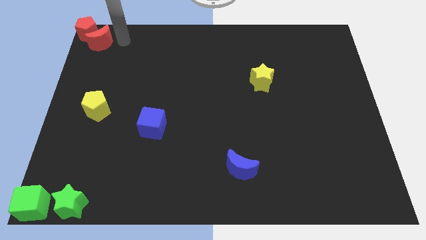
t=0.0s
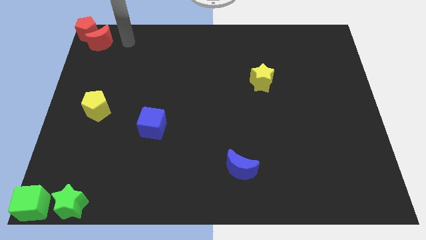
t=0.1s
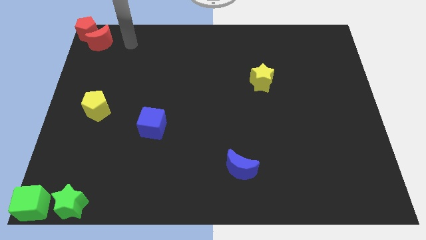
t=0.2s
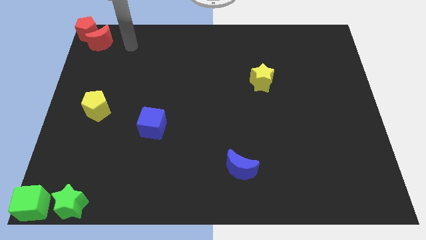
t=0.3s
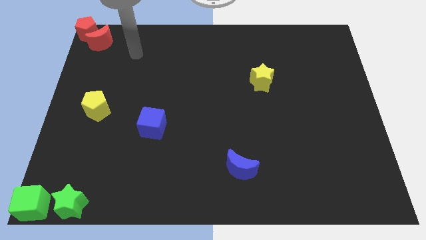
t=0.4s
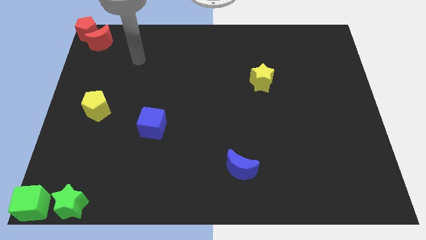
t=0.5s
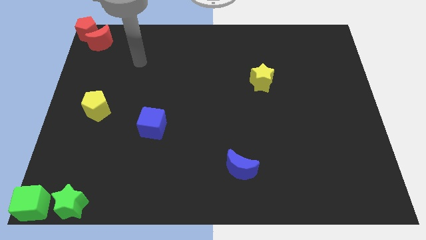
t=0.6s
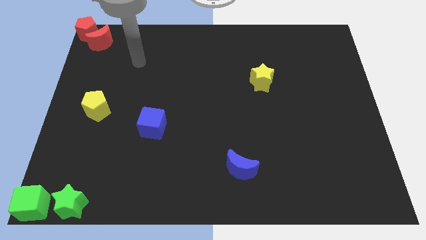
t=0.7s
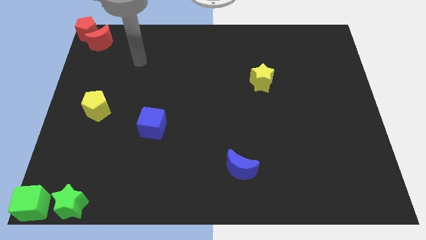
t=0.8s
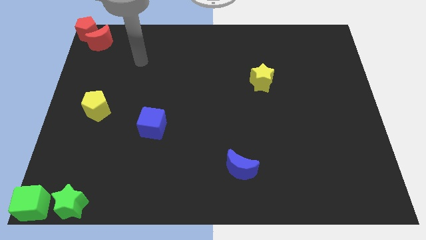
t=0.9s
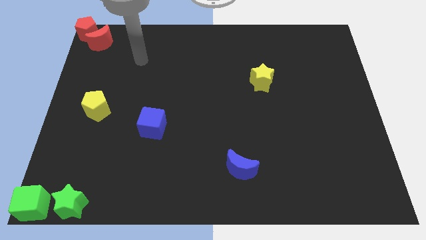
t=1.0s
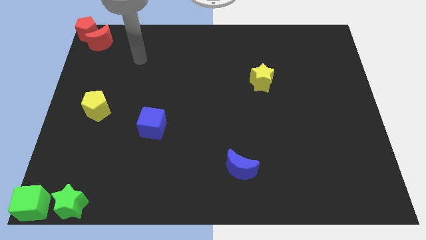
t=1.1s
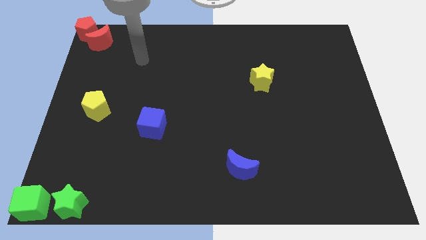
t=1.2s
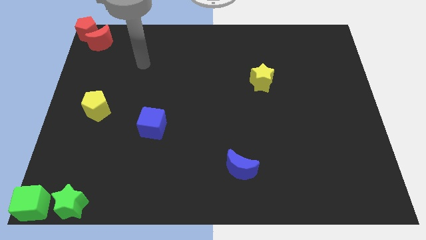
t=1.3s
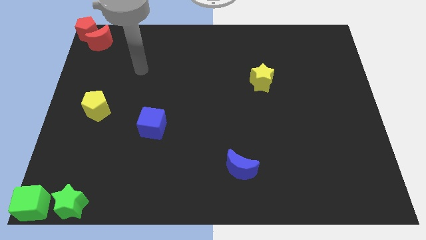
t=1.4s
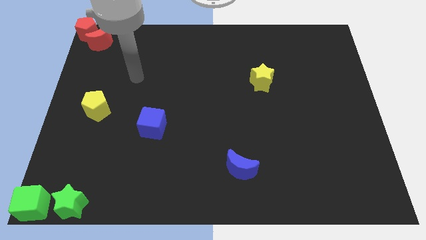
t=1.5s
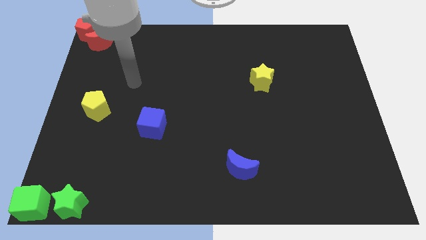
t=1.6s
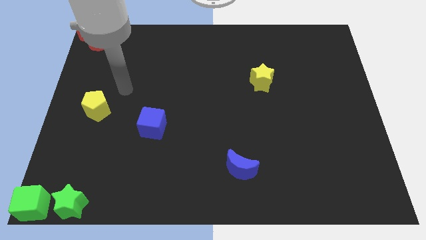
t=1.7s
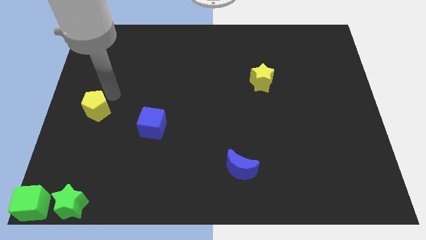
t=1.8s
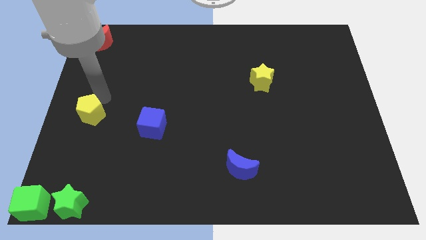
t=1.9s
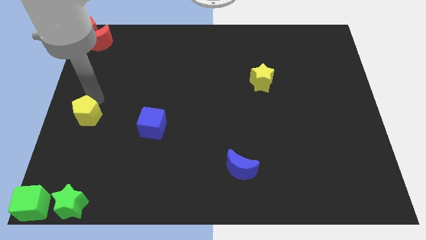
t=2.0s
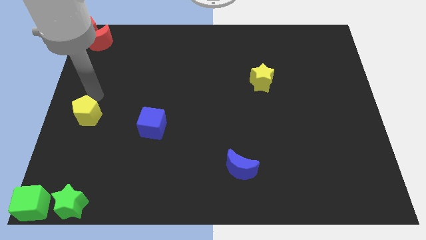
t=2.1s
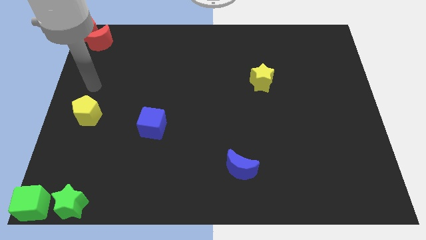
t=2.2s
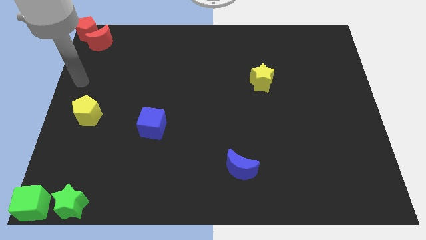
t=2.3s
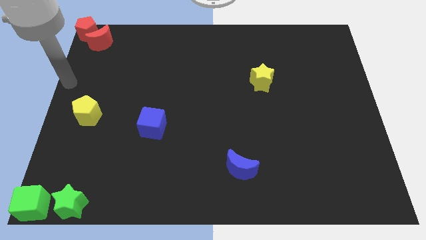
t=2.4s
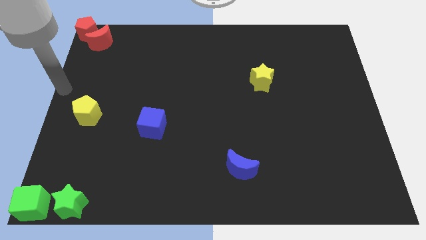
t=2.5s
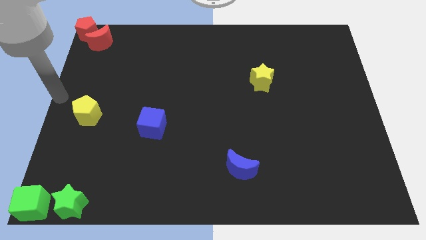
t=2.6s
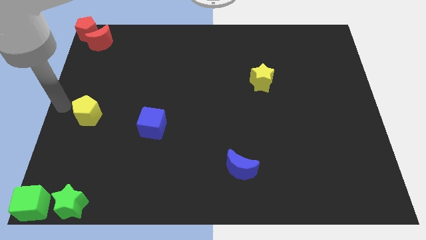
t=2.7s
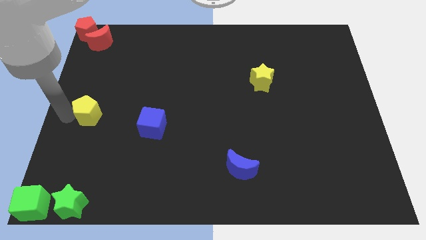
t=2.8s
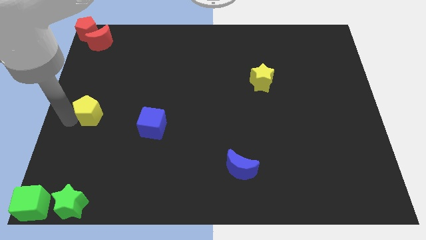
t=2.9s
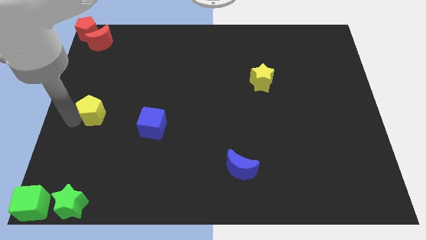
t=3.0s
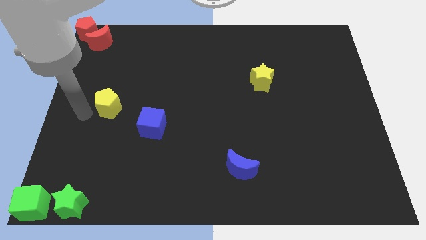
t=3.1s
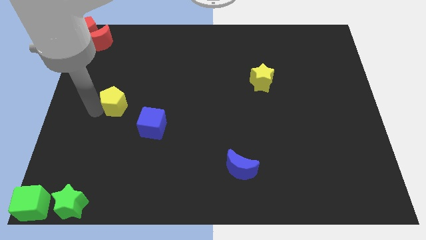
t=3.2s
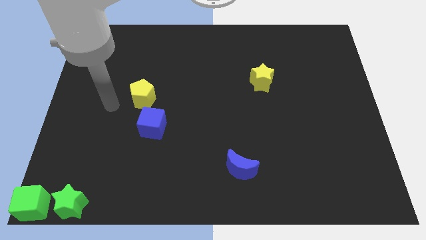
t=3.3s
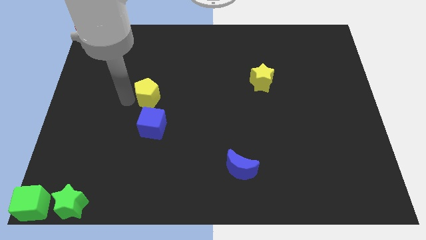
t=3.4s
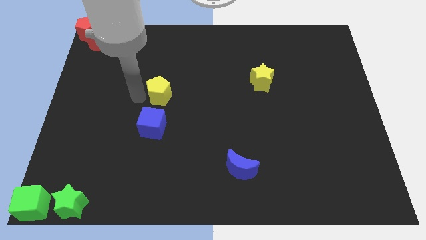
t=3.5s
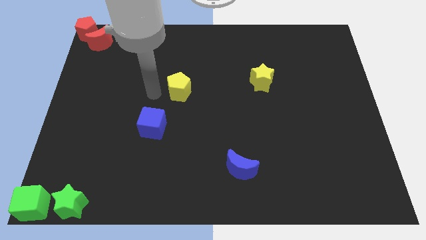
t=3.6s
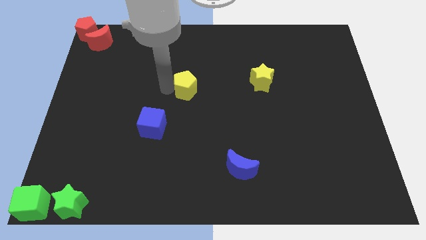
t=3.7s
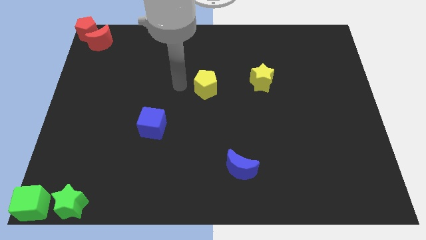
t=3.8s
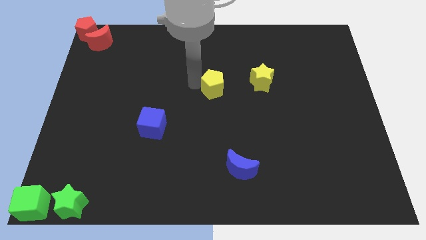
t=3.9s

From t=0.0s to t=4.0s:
move the yellow pentagon to the top of the center

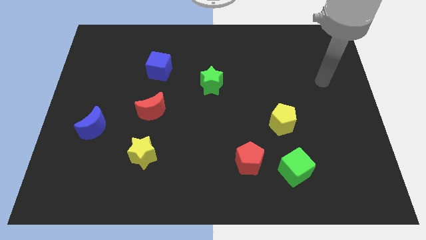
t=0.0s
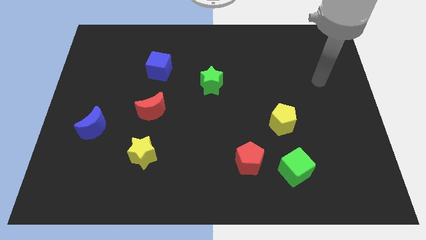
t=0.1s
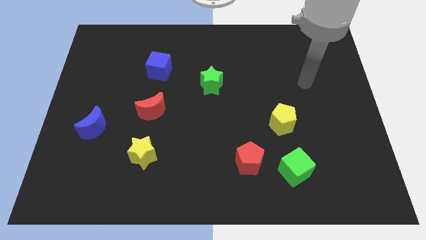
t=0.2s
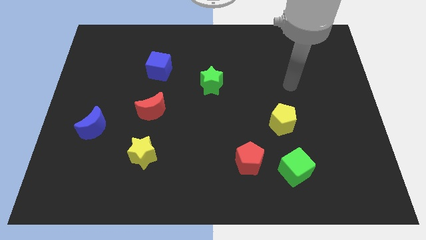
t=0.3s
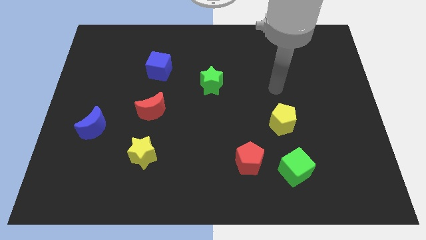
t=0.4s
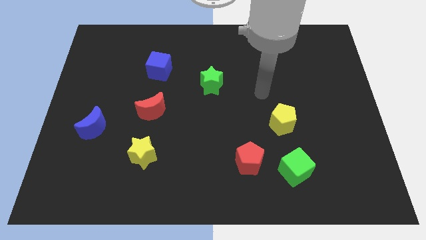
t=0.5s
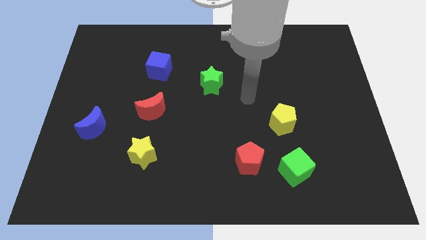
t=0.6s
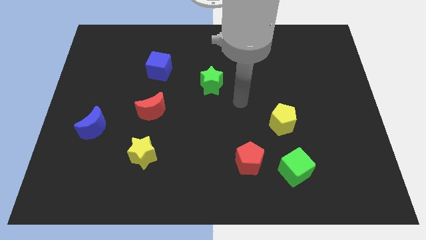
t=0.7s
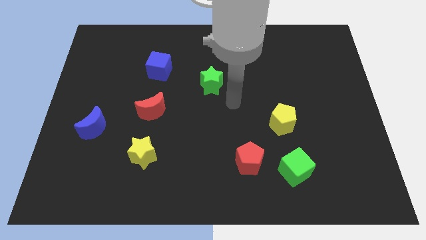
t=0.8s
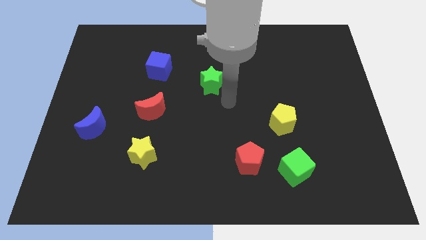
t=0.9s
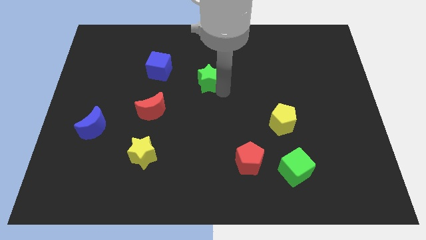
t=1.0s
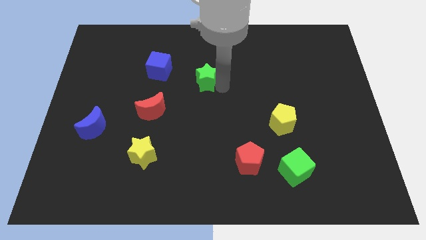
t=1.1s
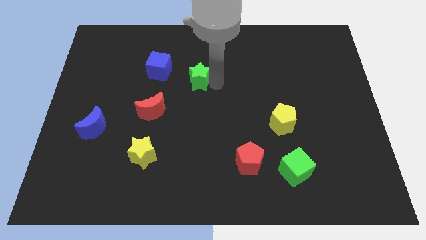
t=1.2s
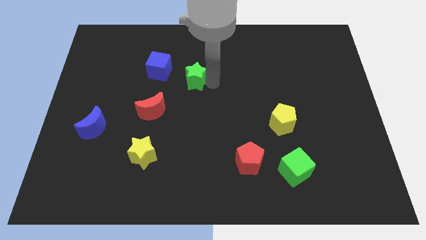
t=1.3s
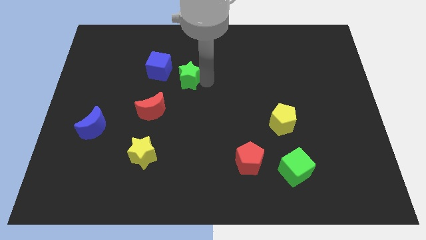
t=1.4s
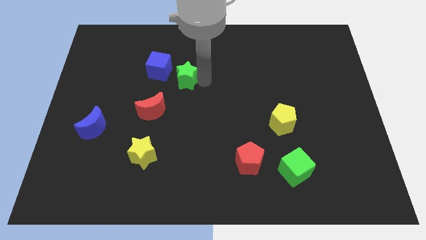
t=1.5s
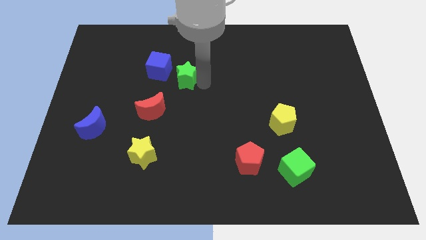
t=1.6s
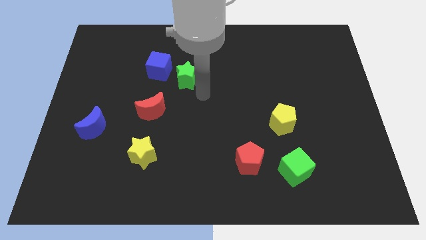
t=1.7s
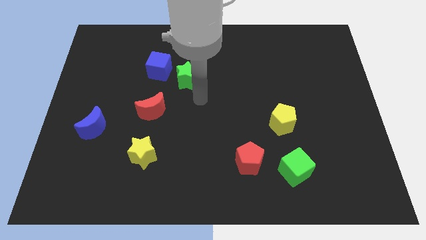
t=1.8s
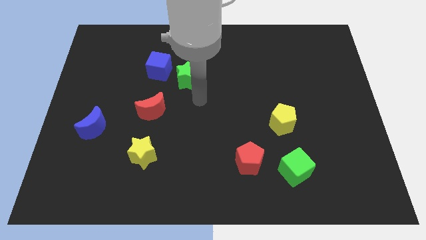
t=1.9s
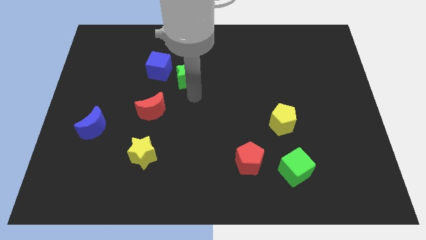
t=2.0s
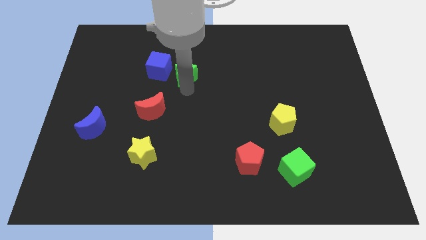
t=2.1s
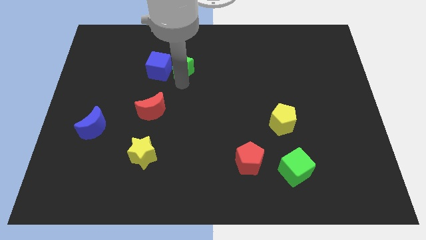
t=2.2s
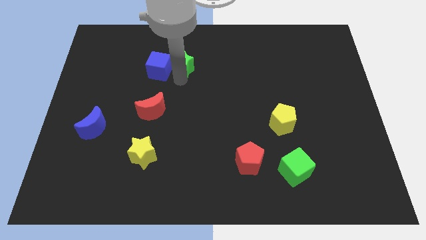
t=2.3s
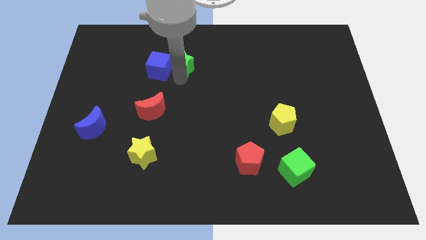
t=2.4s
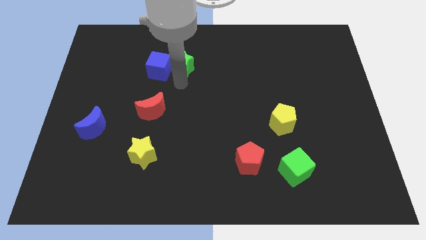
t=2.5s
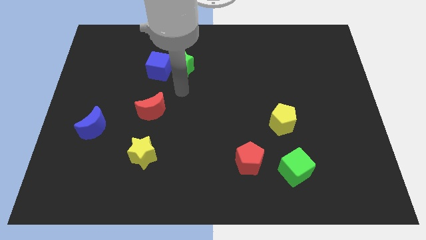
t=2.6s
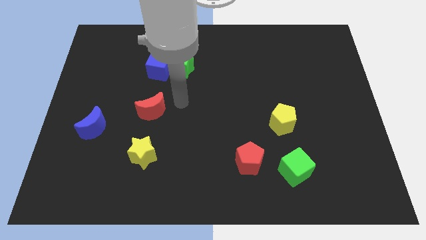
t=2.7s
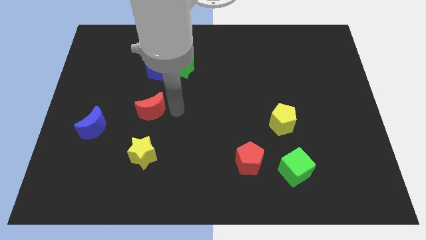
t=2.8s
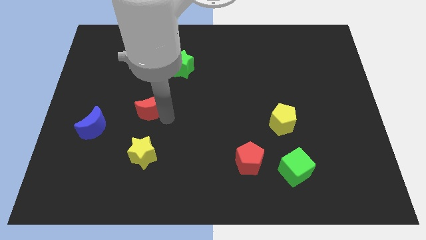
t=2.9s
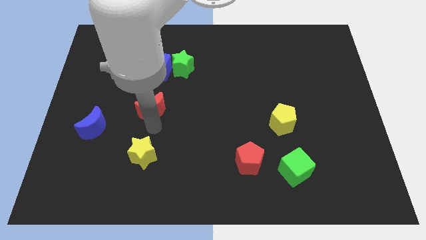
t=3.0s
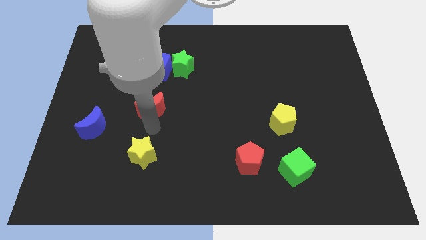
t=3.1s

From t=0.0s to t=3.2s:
place the green star right to the blue cube

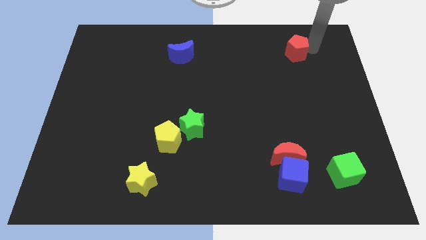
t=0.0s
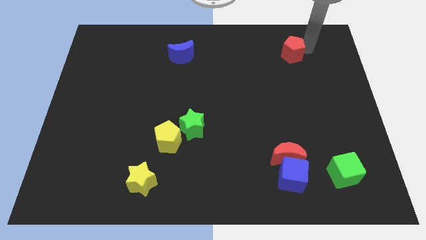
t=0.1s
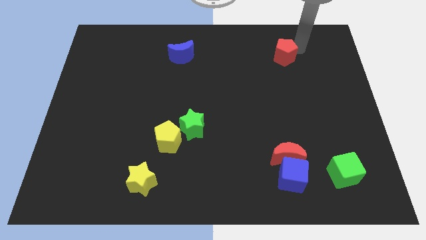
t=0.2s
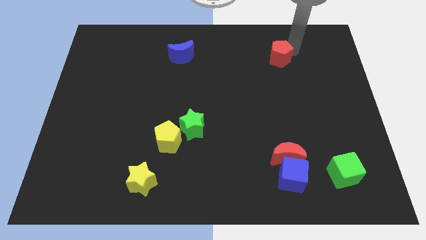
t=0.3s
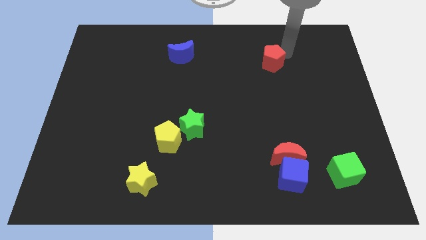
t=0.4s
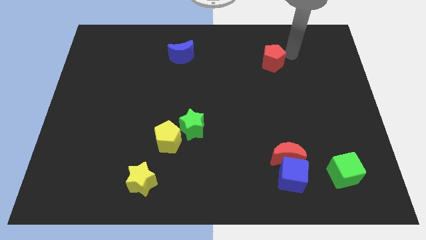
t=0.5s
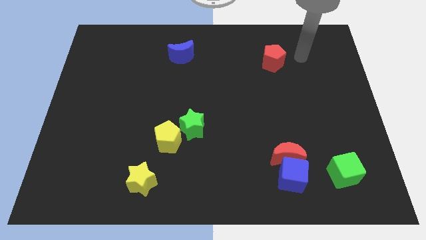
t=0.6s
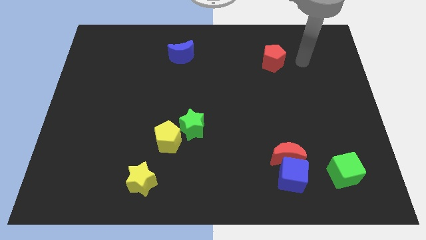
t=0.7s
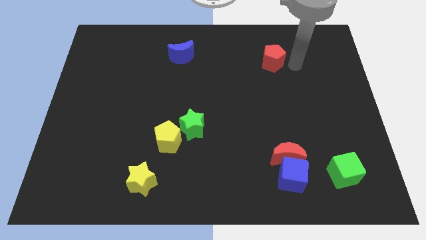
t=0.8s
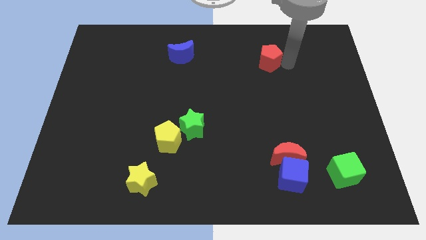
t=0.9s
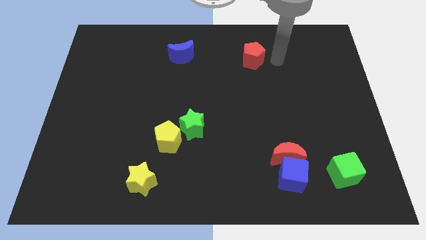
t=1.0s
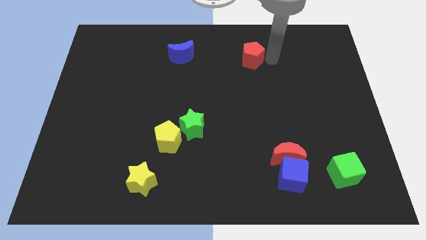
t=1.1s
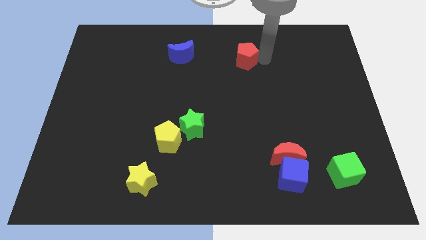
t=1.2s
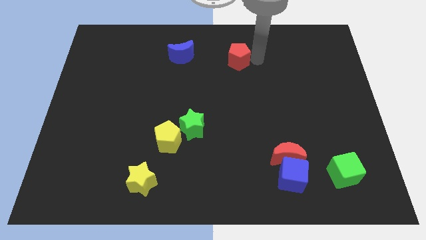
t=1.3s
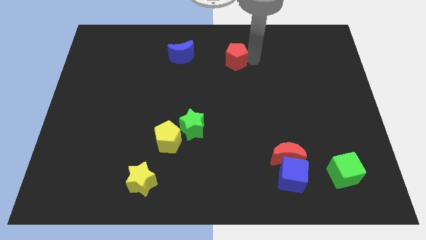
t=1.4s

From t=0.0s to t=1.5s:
push the red pentagon slightly to the left side

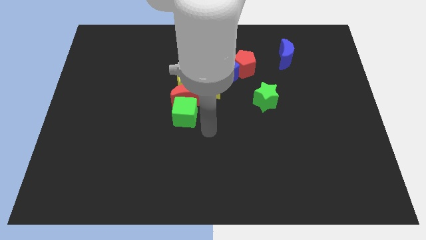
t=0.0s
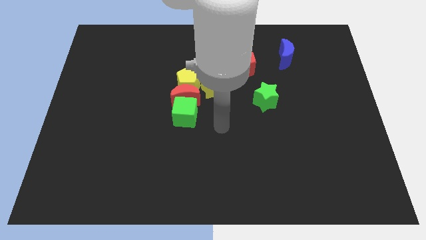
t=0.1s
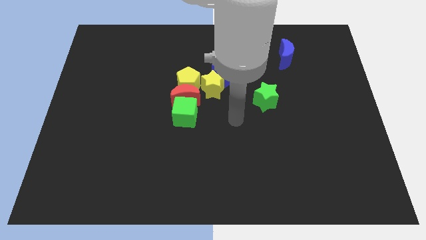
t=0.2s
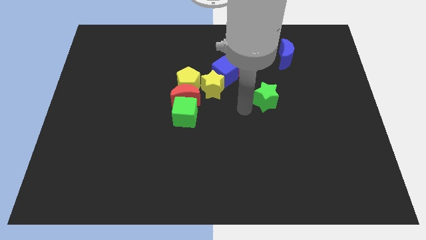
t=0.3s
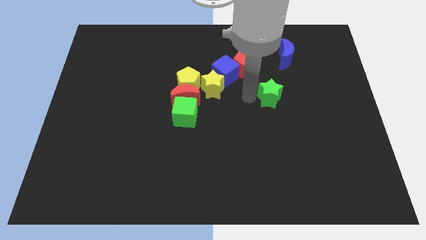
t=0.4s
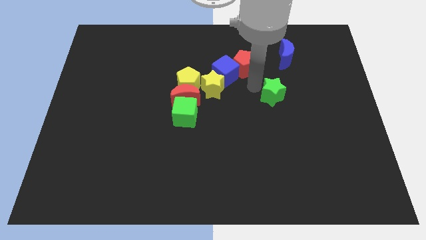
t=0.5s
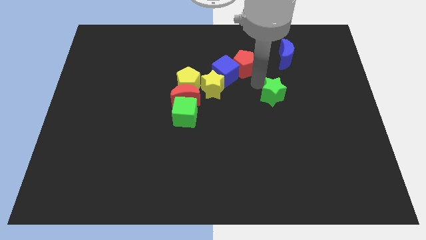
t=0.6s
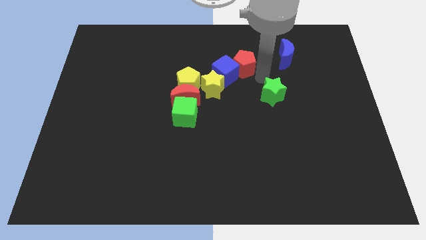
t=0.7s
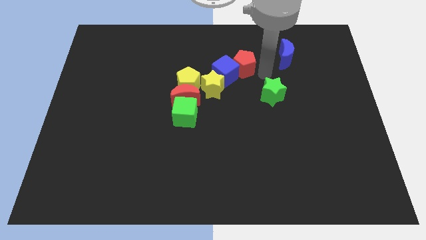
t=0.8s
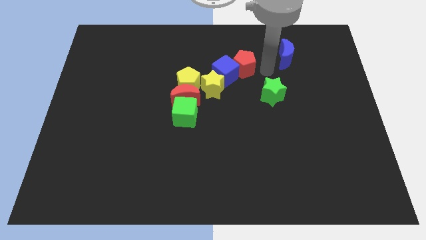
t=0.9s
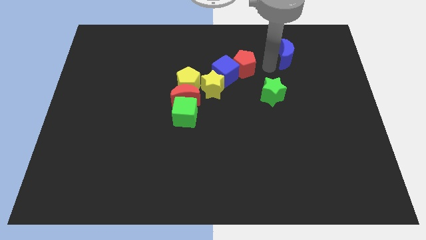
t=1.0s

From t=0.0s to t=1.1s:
move the arm to the left side of the blue crescent
